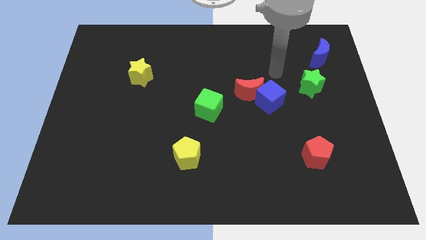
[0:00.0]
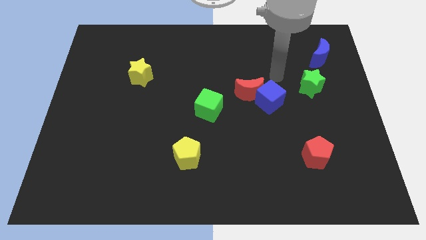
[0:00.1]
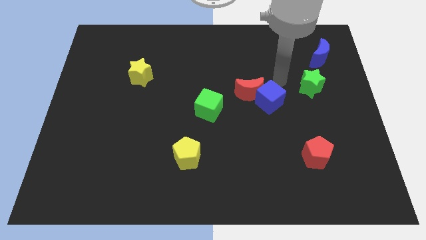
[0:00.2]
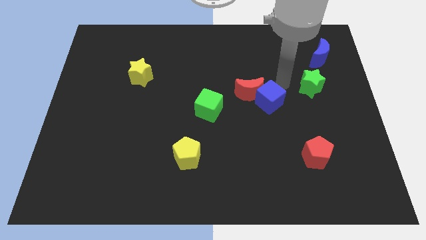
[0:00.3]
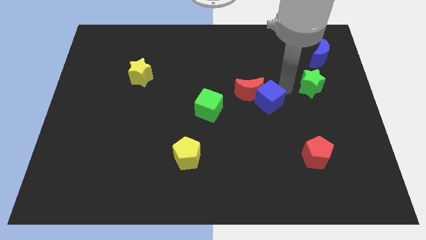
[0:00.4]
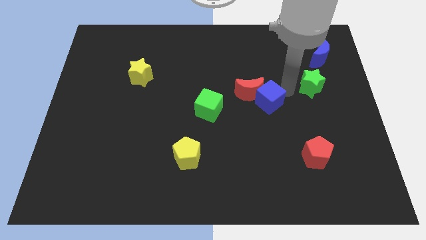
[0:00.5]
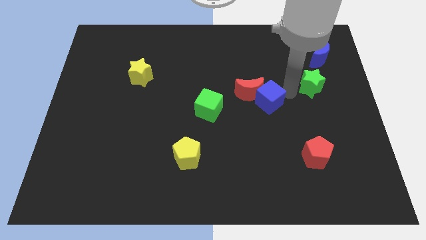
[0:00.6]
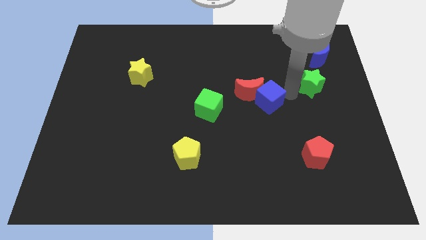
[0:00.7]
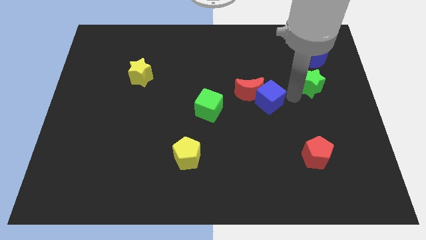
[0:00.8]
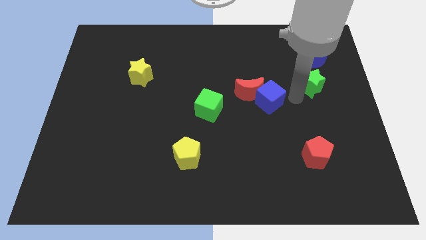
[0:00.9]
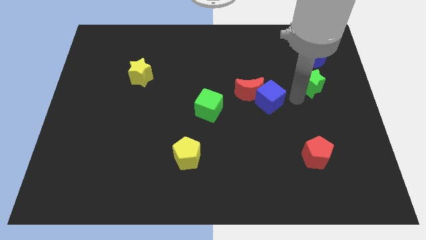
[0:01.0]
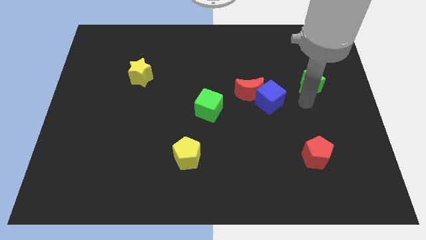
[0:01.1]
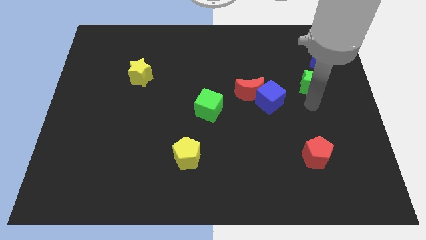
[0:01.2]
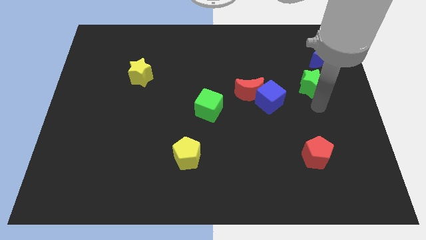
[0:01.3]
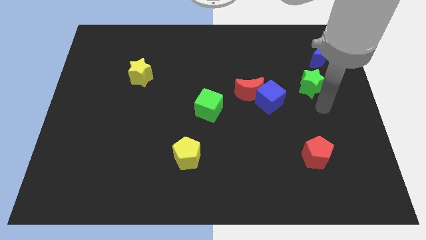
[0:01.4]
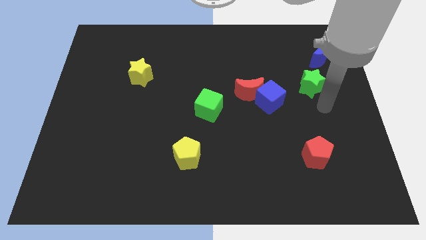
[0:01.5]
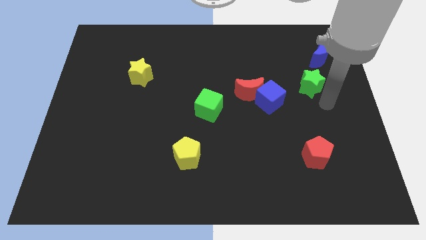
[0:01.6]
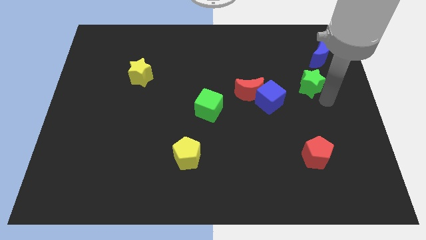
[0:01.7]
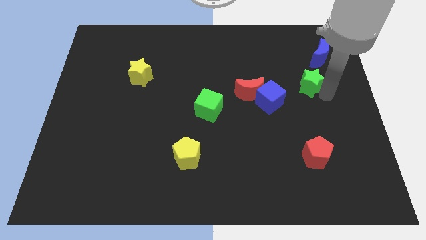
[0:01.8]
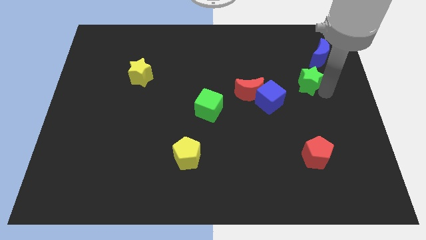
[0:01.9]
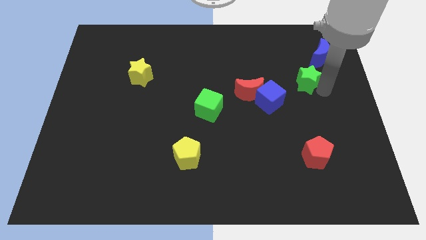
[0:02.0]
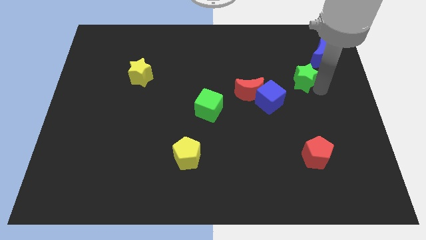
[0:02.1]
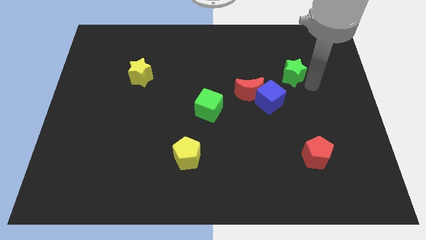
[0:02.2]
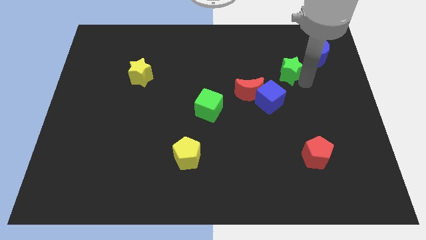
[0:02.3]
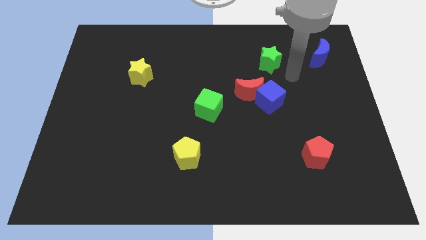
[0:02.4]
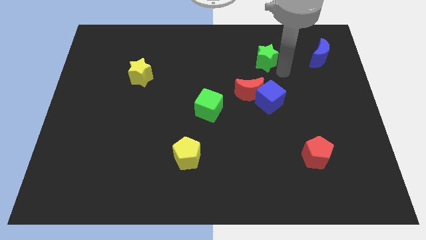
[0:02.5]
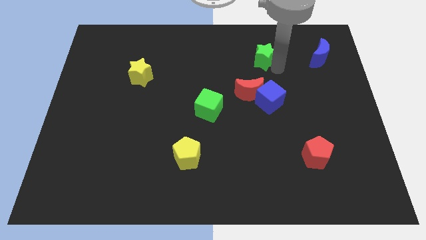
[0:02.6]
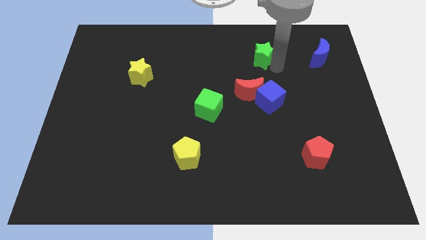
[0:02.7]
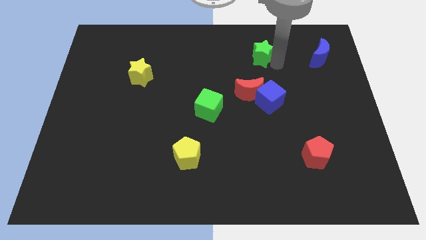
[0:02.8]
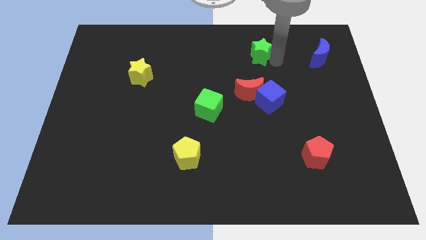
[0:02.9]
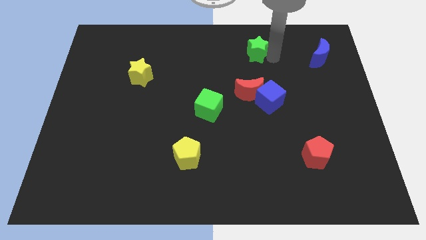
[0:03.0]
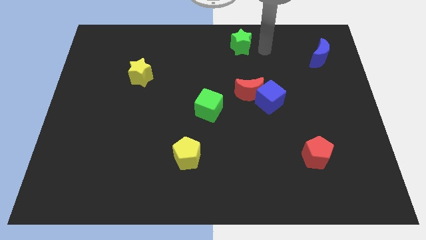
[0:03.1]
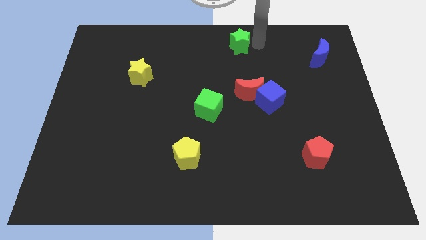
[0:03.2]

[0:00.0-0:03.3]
push the green star towards top side of the table

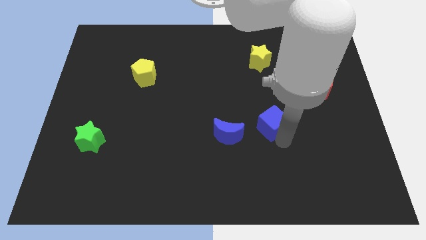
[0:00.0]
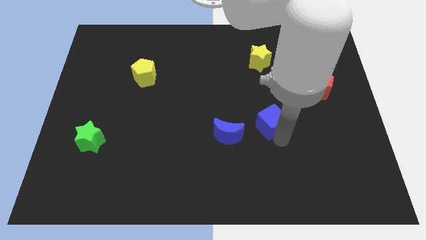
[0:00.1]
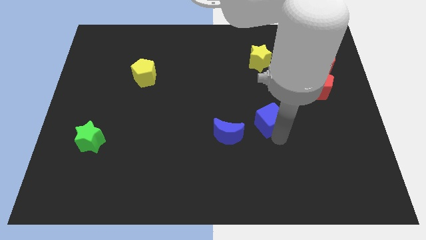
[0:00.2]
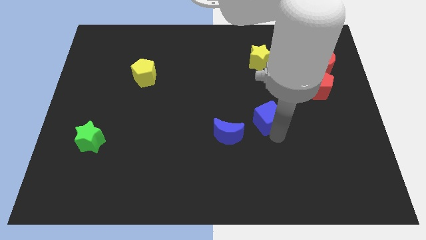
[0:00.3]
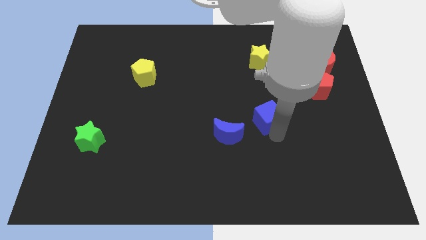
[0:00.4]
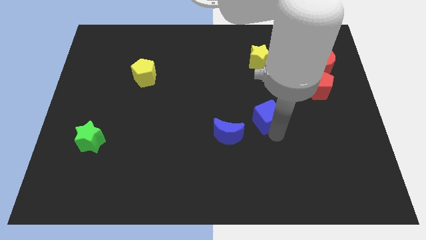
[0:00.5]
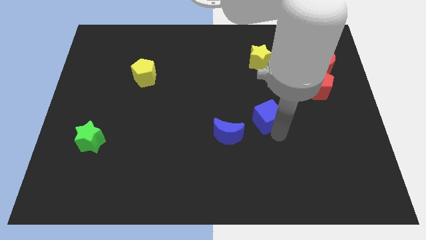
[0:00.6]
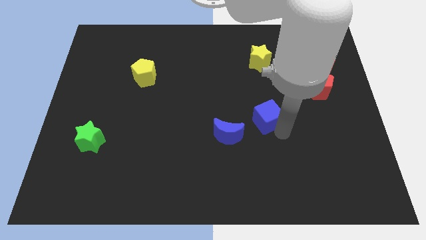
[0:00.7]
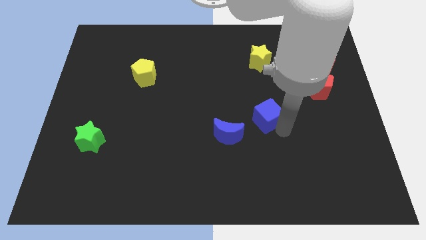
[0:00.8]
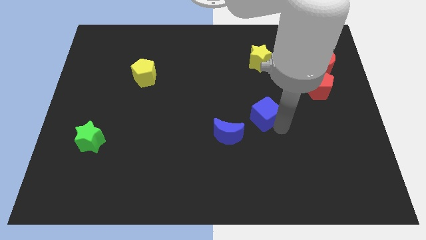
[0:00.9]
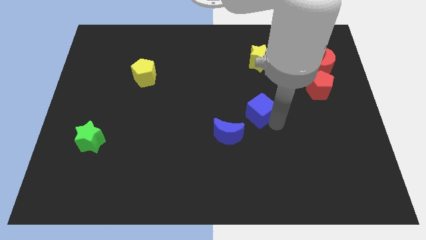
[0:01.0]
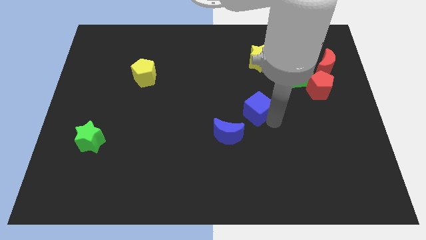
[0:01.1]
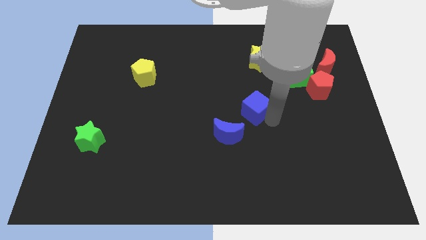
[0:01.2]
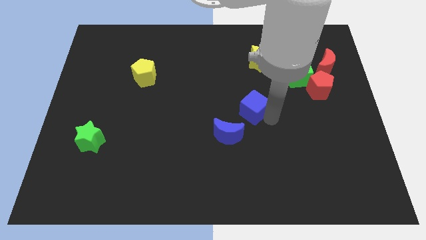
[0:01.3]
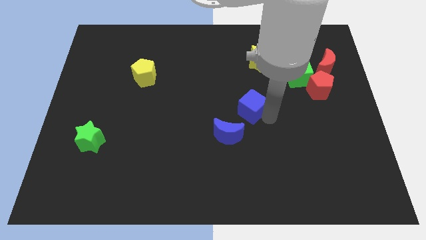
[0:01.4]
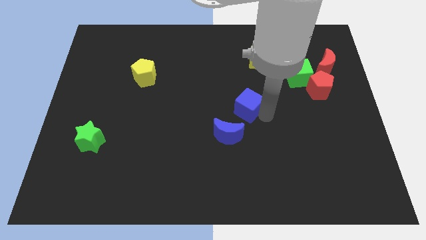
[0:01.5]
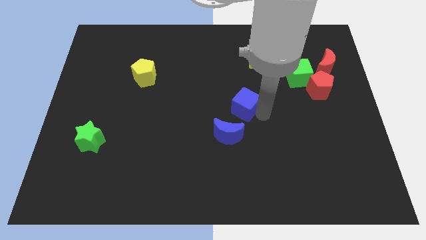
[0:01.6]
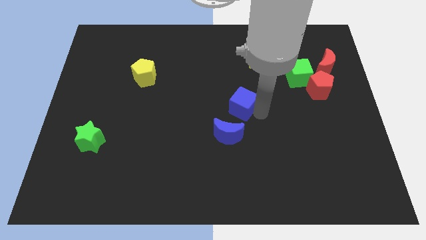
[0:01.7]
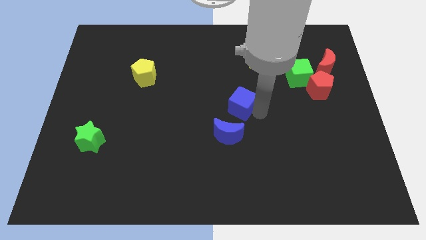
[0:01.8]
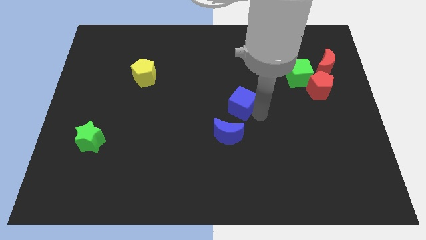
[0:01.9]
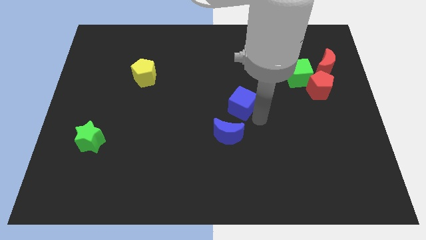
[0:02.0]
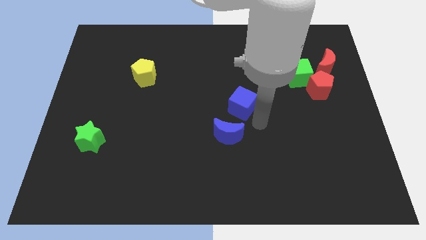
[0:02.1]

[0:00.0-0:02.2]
move the blue cube to the top of the blue moon

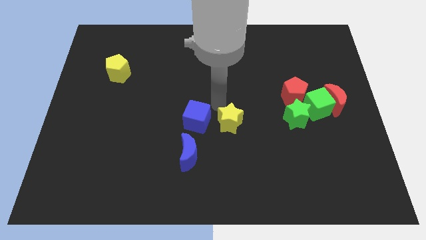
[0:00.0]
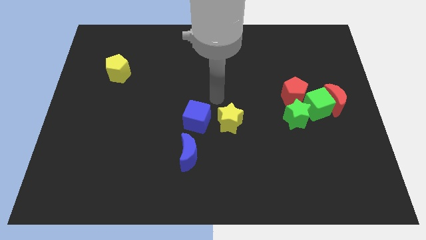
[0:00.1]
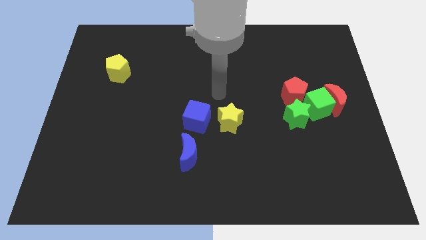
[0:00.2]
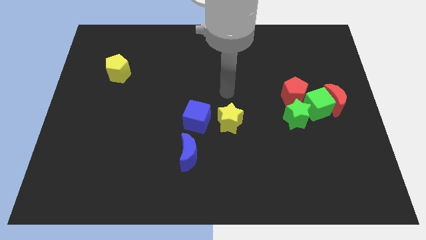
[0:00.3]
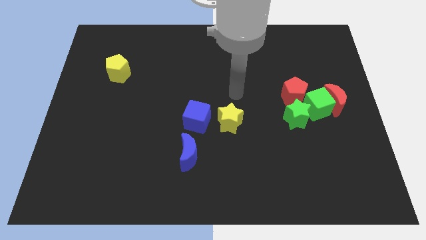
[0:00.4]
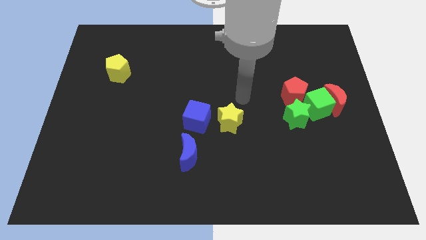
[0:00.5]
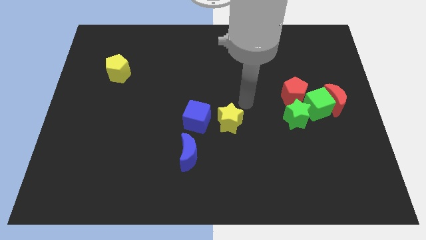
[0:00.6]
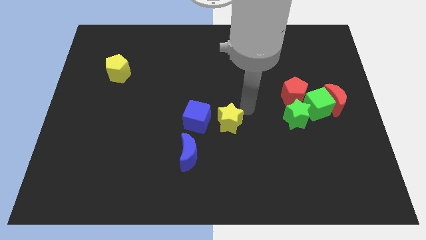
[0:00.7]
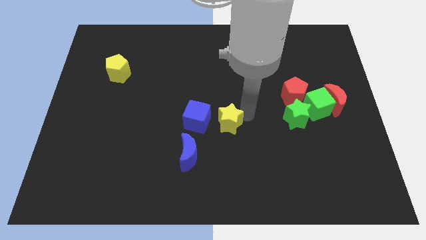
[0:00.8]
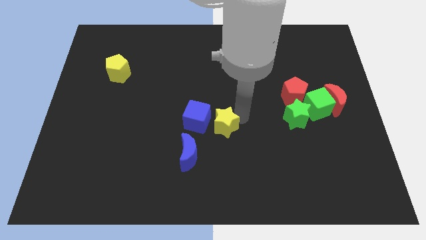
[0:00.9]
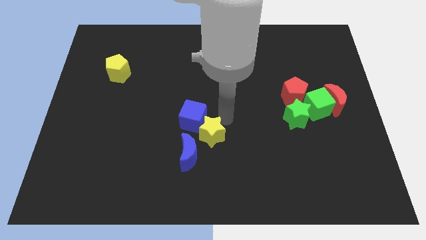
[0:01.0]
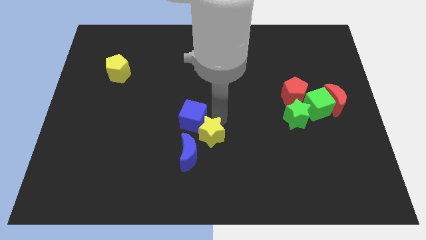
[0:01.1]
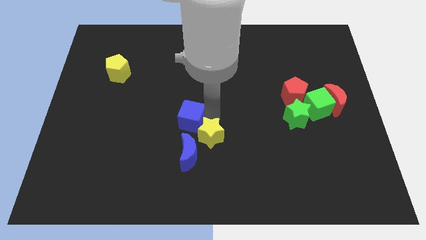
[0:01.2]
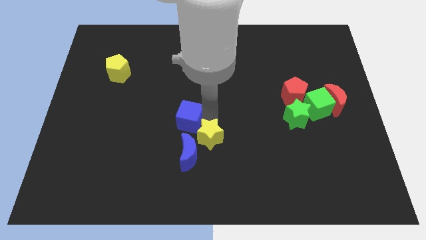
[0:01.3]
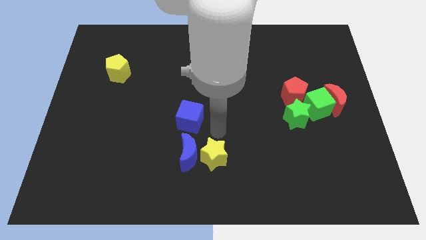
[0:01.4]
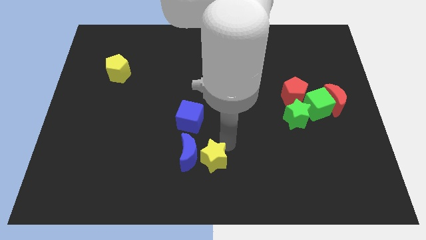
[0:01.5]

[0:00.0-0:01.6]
place the yellow star to right side of the blue crescent

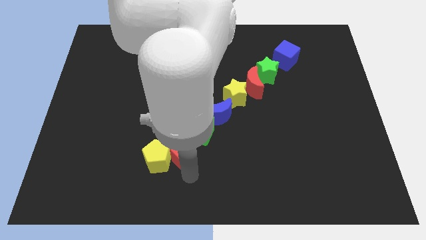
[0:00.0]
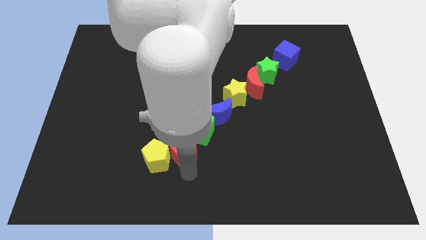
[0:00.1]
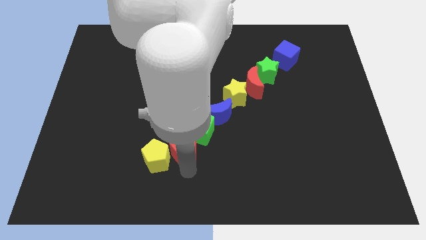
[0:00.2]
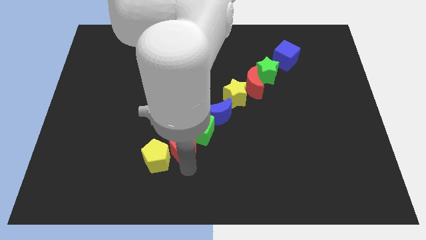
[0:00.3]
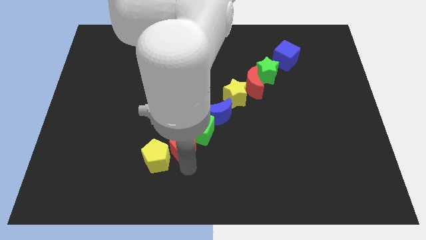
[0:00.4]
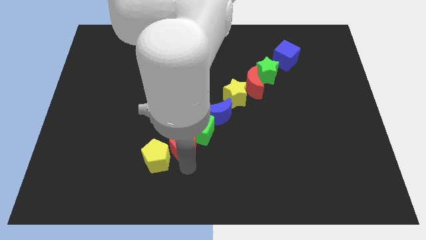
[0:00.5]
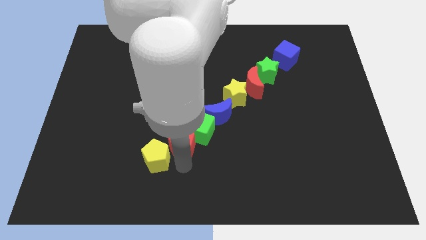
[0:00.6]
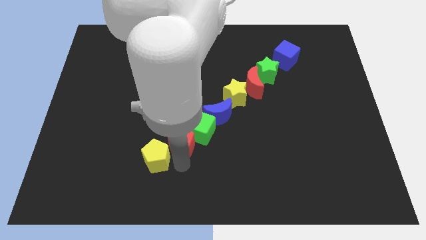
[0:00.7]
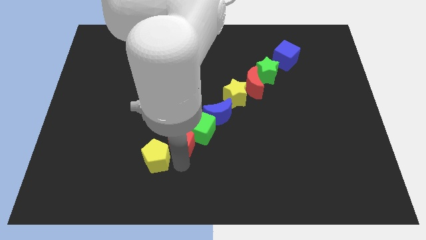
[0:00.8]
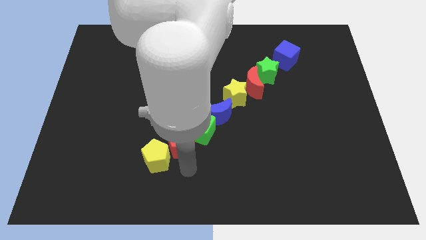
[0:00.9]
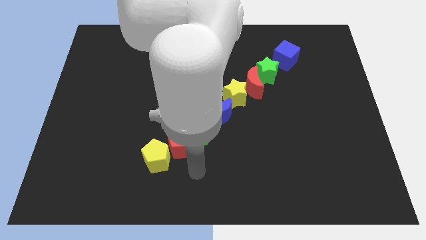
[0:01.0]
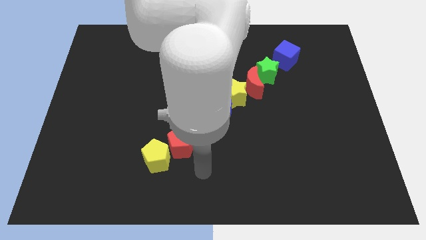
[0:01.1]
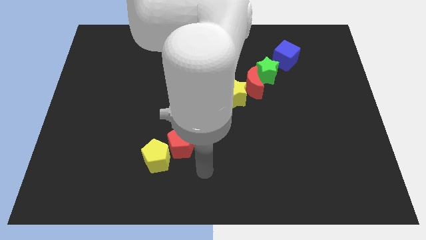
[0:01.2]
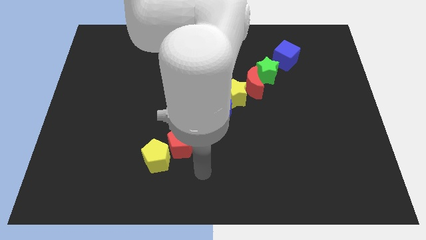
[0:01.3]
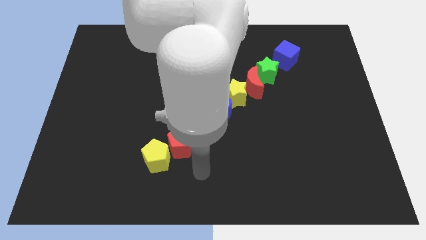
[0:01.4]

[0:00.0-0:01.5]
place the red pentagon diagonally in between the green cube and yellow pentagon

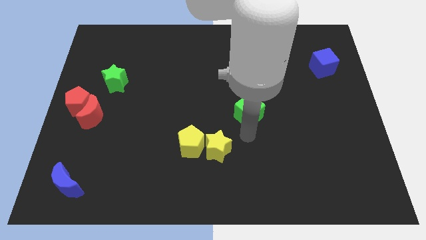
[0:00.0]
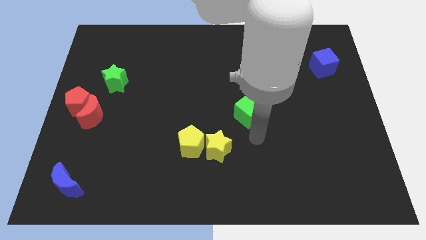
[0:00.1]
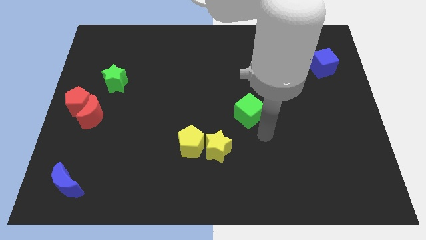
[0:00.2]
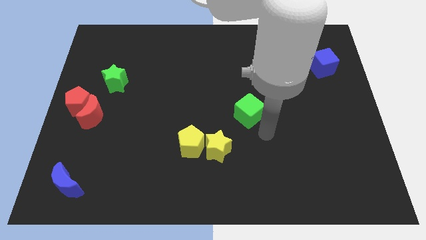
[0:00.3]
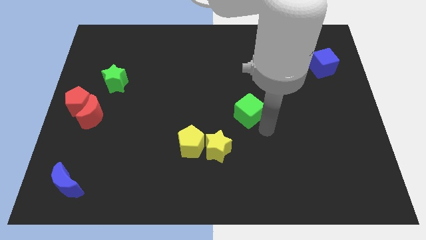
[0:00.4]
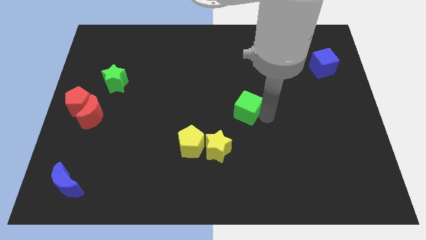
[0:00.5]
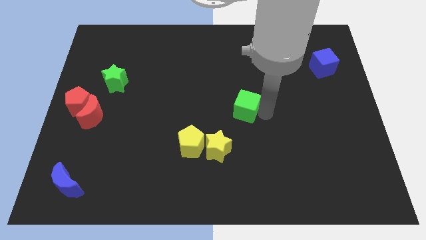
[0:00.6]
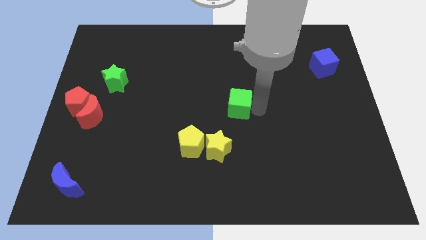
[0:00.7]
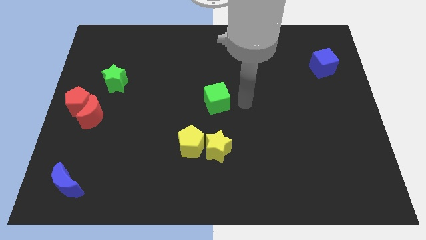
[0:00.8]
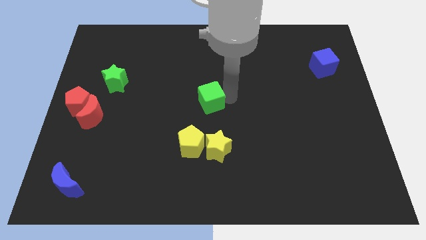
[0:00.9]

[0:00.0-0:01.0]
push green cube at center
